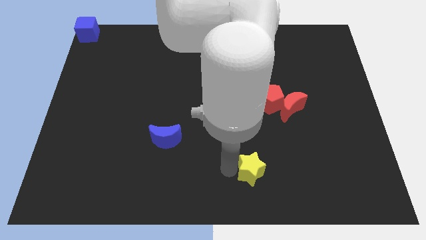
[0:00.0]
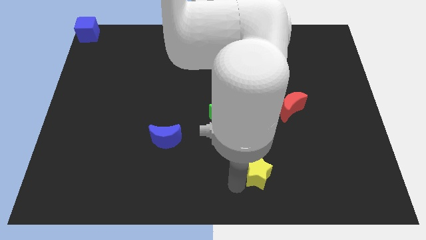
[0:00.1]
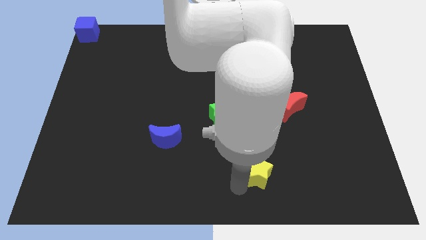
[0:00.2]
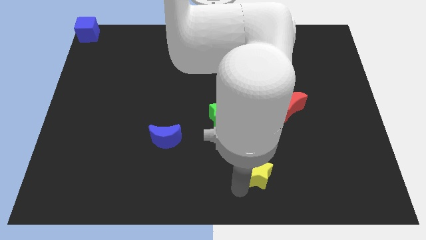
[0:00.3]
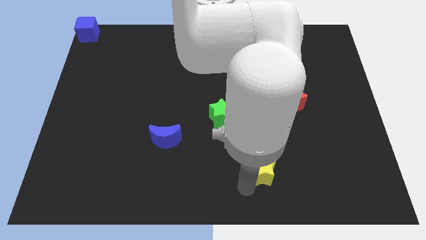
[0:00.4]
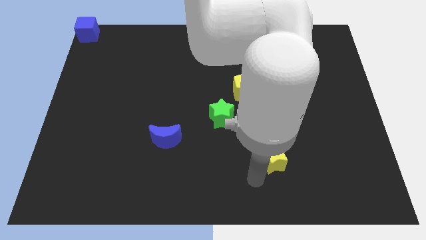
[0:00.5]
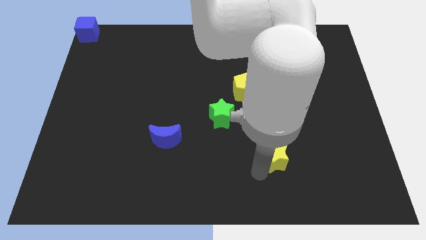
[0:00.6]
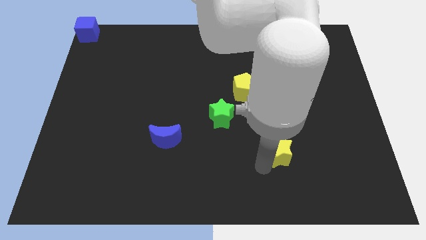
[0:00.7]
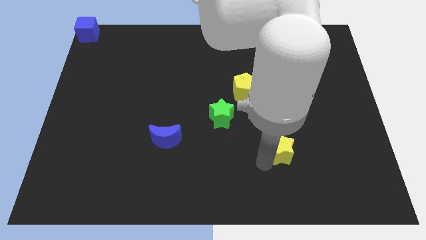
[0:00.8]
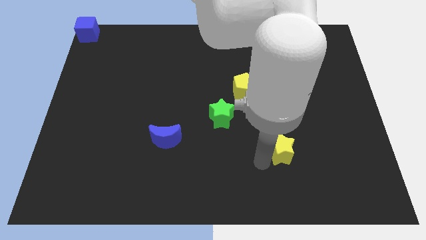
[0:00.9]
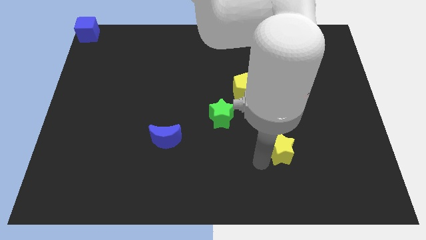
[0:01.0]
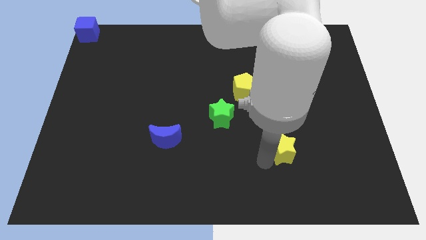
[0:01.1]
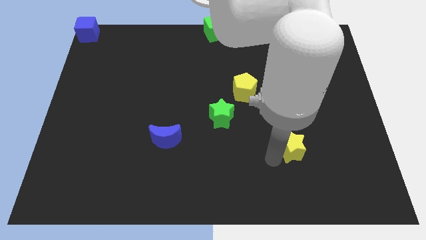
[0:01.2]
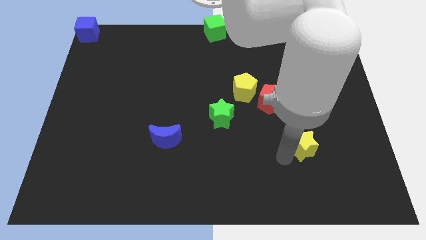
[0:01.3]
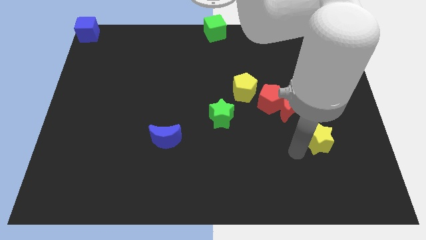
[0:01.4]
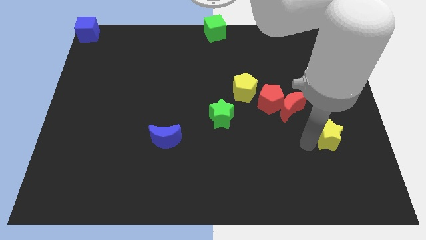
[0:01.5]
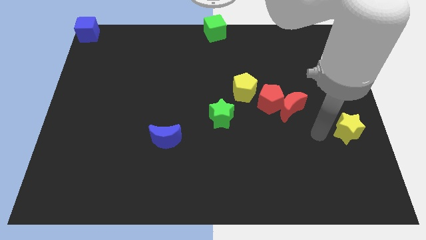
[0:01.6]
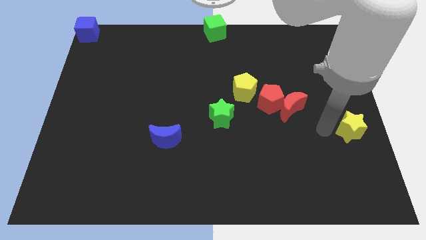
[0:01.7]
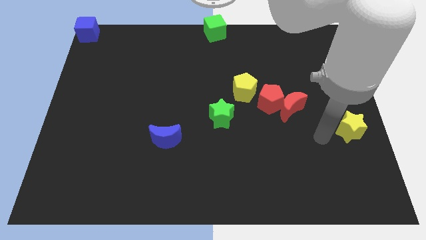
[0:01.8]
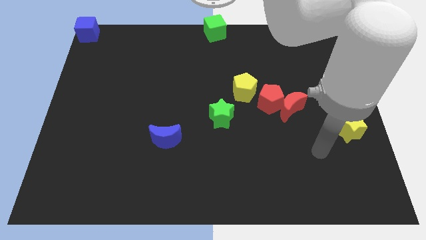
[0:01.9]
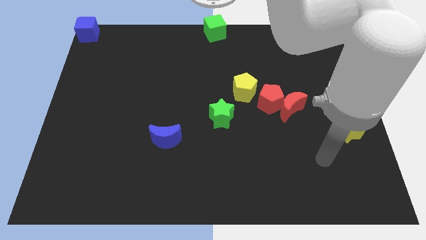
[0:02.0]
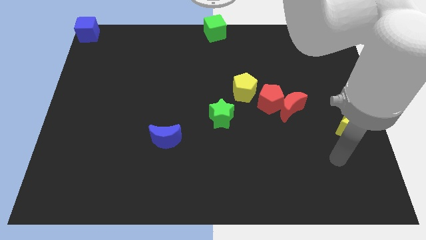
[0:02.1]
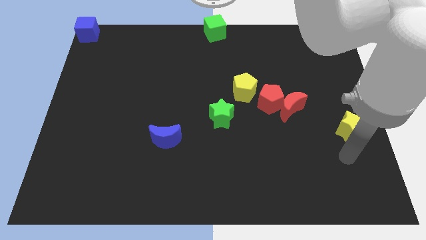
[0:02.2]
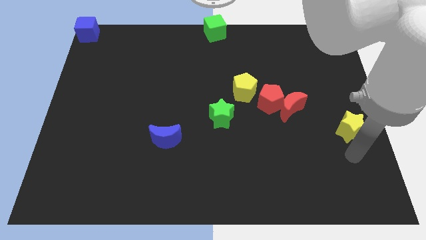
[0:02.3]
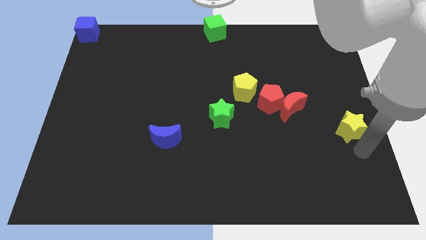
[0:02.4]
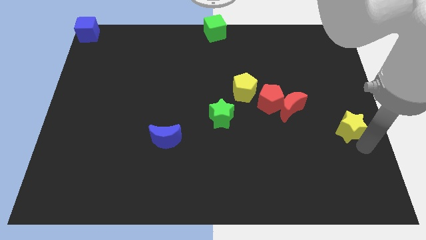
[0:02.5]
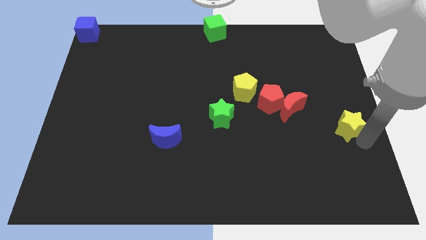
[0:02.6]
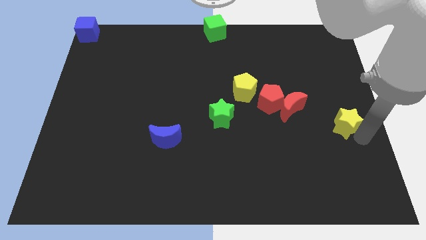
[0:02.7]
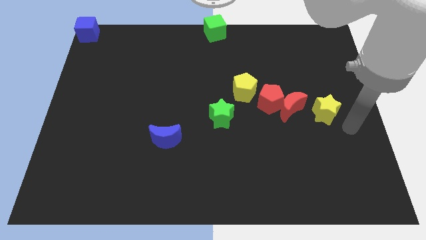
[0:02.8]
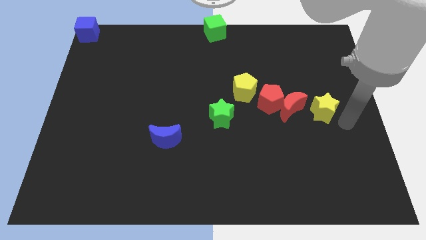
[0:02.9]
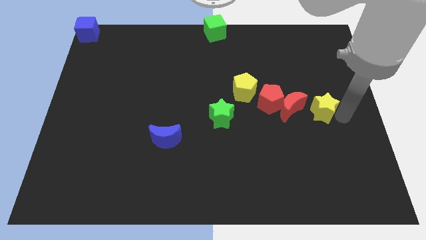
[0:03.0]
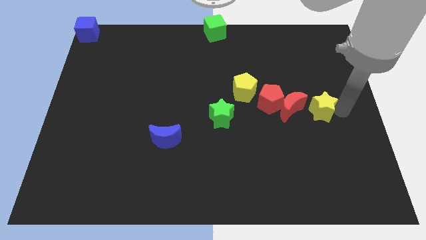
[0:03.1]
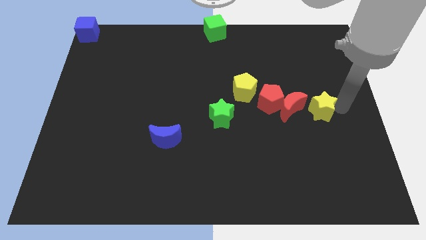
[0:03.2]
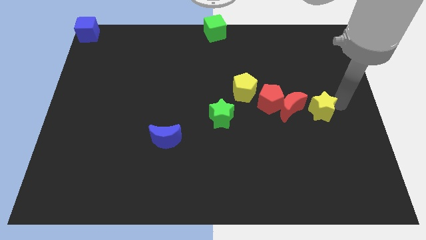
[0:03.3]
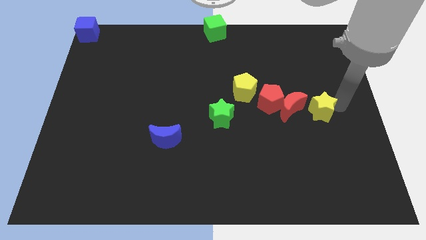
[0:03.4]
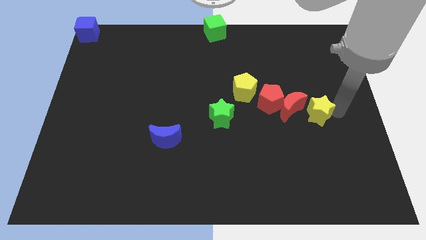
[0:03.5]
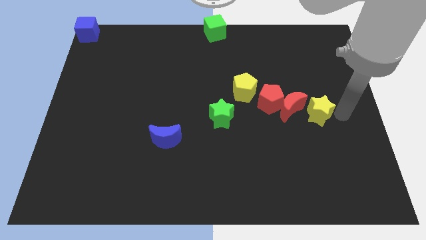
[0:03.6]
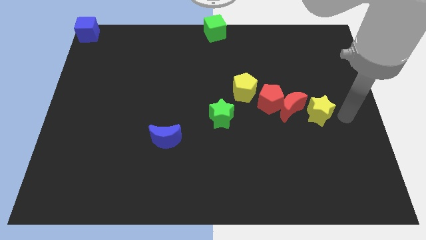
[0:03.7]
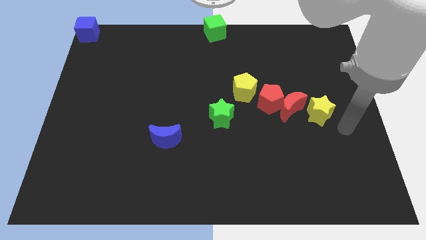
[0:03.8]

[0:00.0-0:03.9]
push the yellow star to the right side of the board

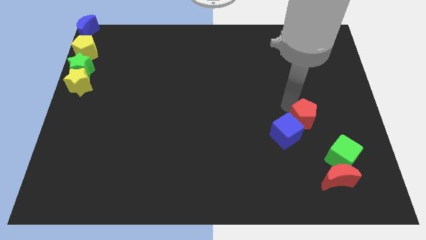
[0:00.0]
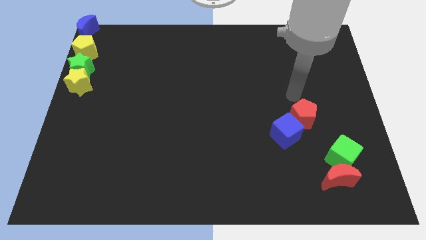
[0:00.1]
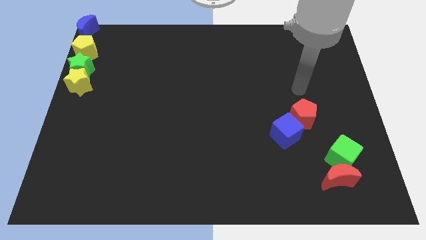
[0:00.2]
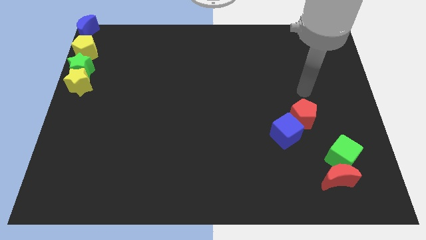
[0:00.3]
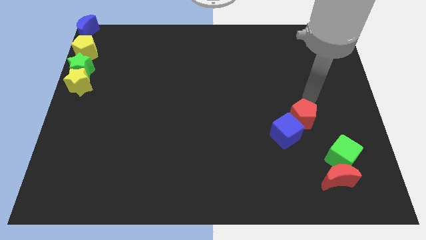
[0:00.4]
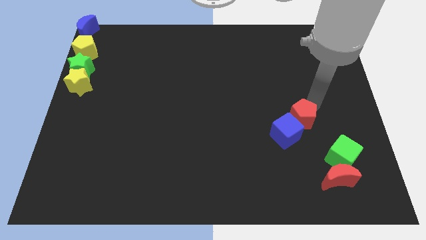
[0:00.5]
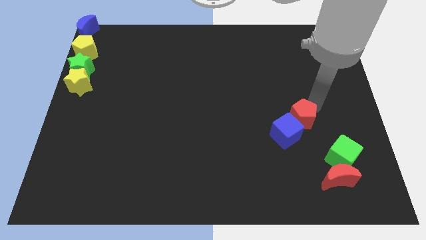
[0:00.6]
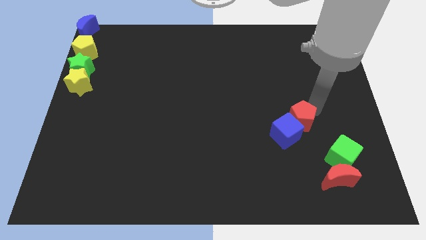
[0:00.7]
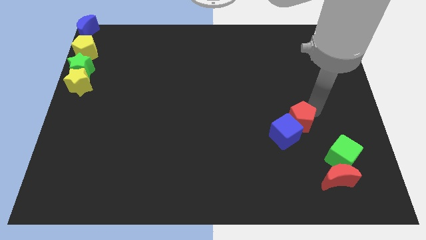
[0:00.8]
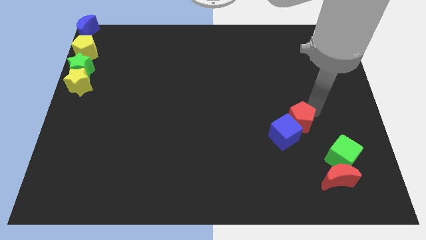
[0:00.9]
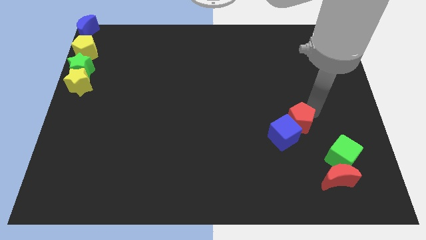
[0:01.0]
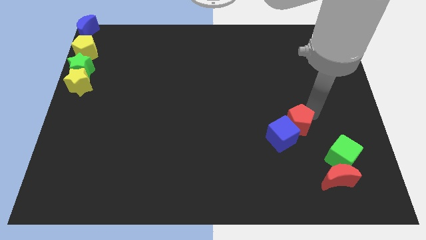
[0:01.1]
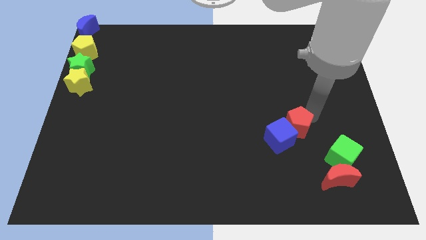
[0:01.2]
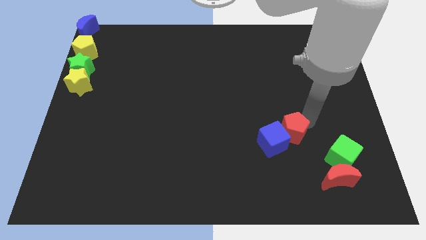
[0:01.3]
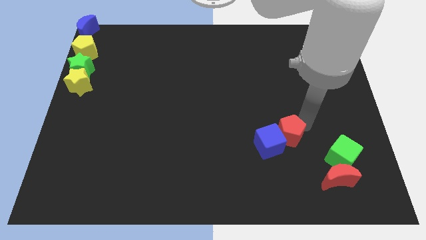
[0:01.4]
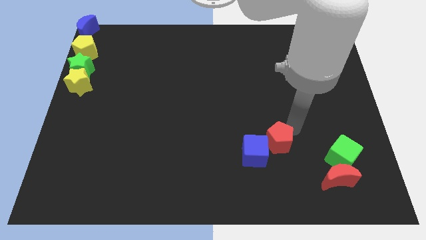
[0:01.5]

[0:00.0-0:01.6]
push the red pentagon into the blue cube

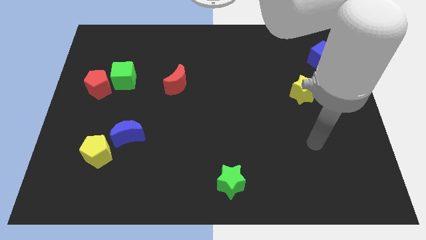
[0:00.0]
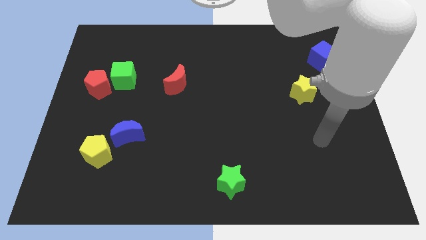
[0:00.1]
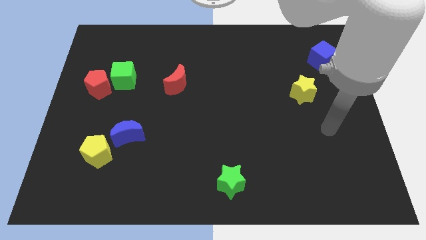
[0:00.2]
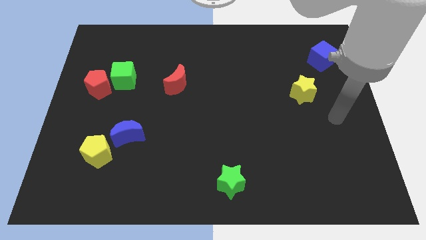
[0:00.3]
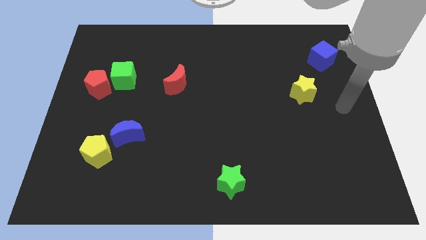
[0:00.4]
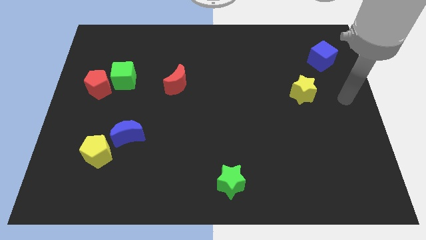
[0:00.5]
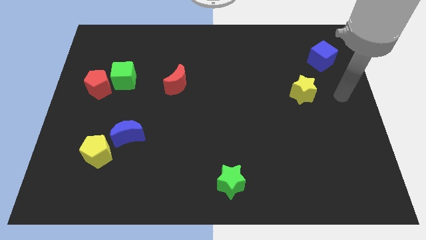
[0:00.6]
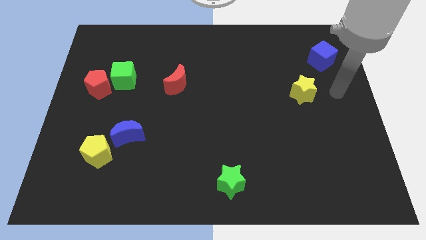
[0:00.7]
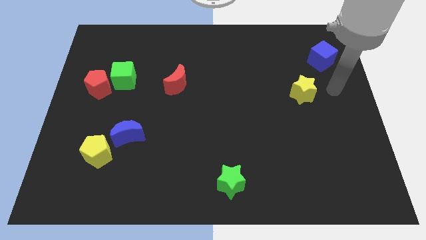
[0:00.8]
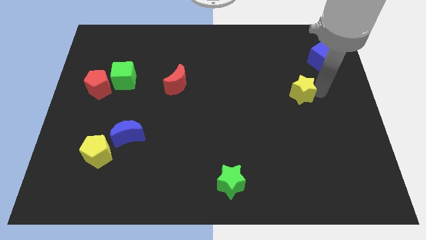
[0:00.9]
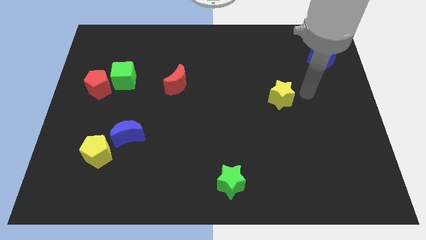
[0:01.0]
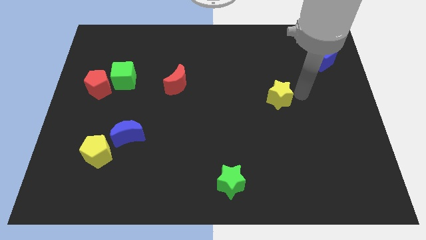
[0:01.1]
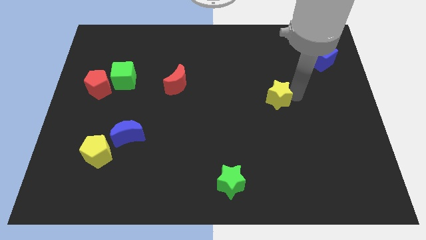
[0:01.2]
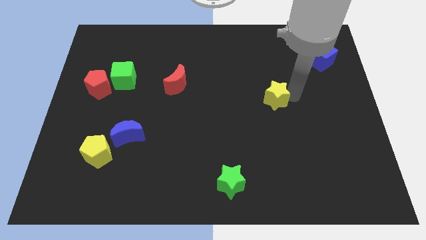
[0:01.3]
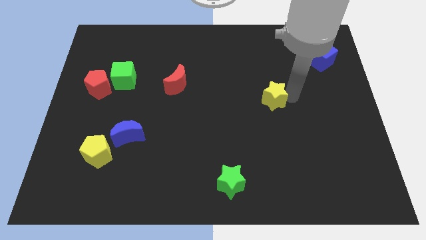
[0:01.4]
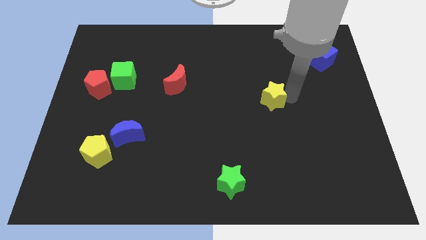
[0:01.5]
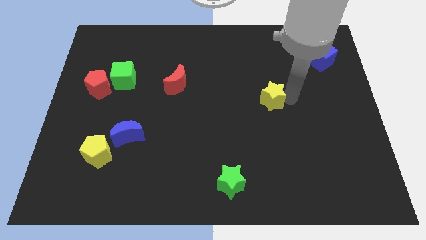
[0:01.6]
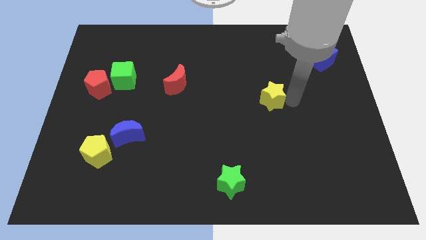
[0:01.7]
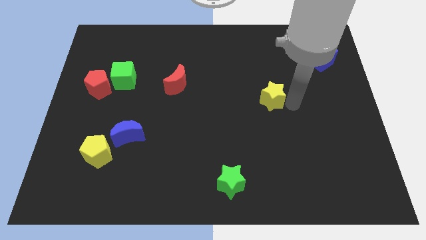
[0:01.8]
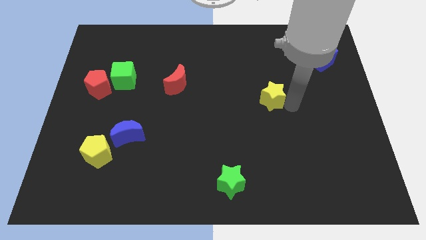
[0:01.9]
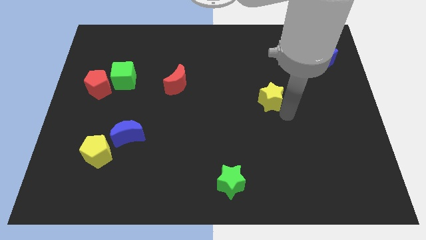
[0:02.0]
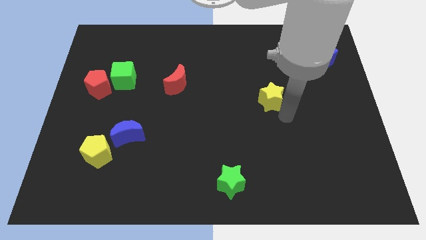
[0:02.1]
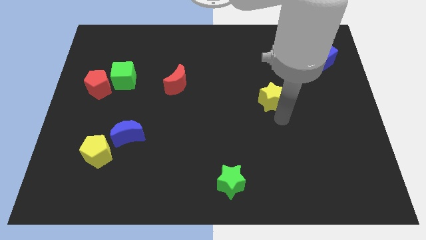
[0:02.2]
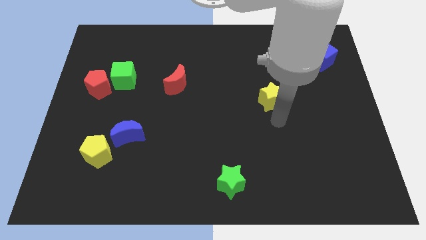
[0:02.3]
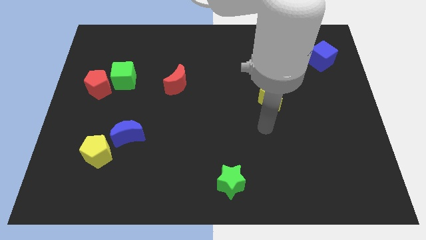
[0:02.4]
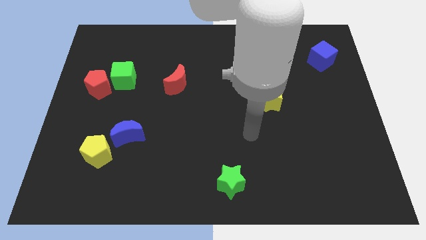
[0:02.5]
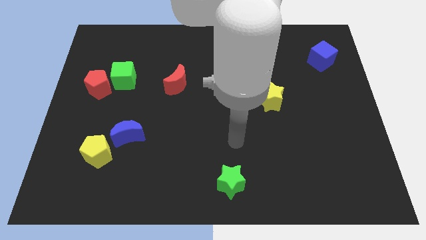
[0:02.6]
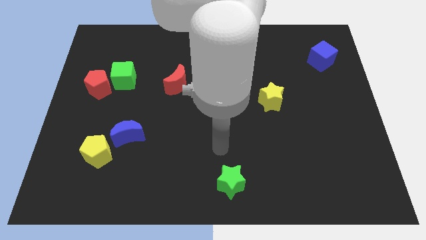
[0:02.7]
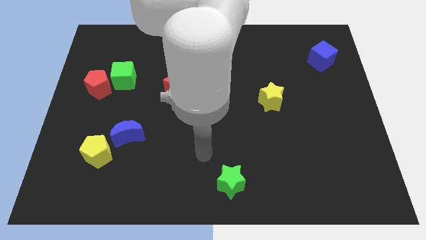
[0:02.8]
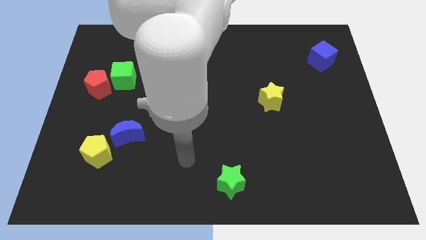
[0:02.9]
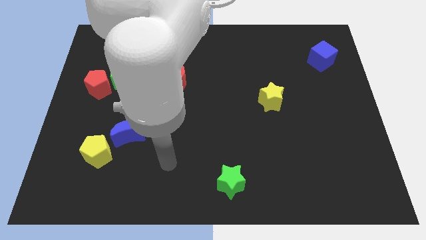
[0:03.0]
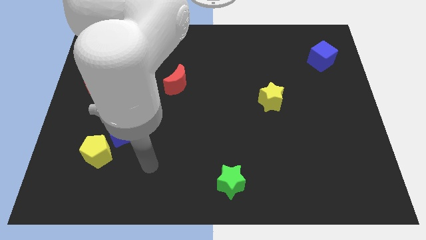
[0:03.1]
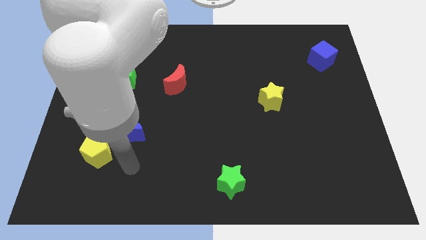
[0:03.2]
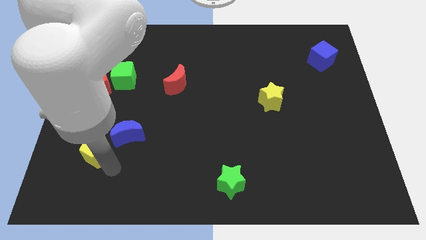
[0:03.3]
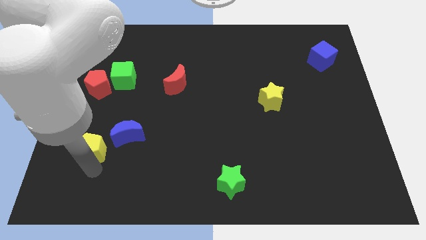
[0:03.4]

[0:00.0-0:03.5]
place your arm below yellow pentagon

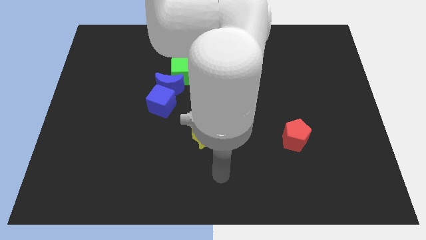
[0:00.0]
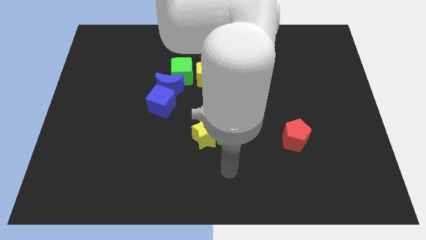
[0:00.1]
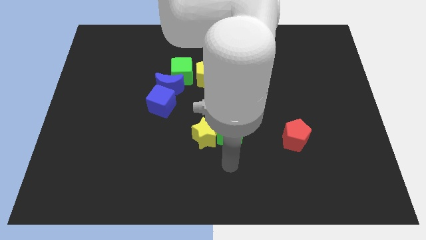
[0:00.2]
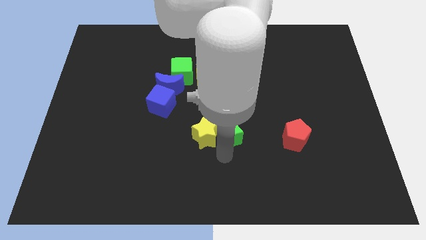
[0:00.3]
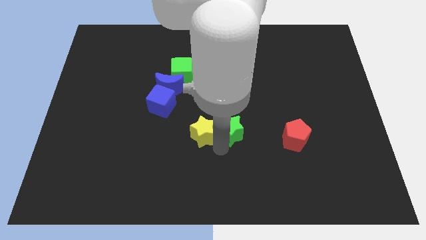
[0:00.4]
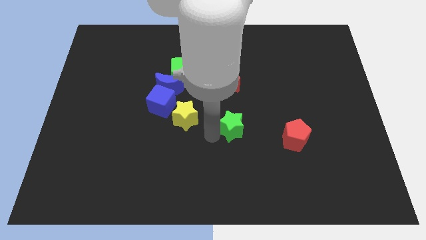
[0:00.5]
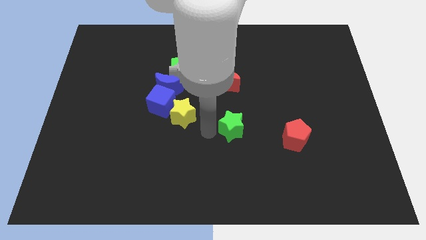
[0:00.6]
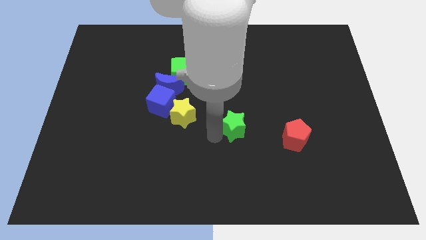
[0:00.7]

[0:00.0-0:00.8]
push the yellow star along with green star towards the blue cube
